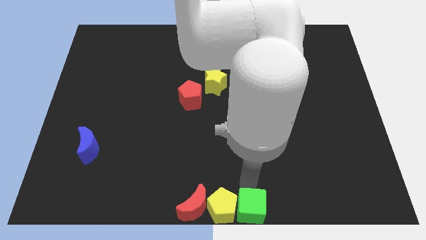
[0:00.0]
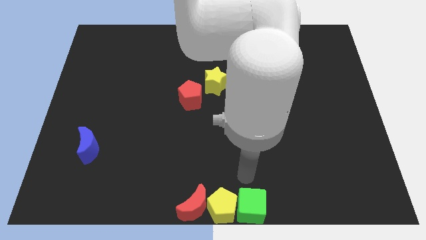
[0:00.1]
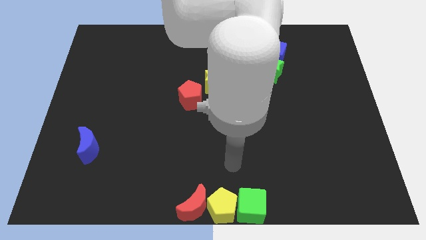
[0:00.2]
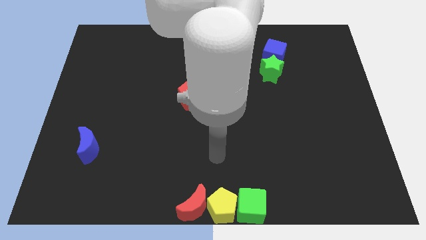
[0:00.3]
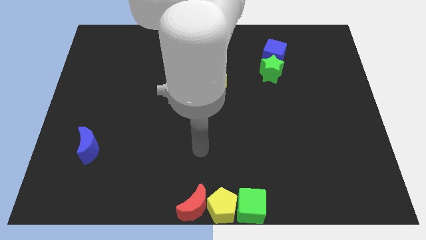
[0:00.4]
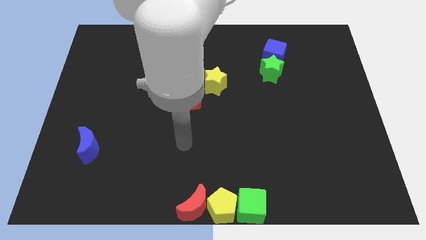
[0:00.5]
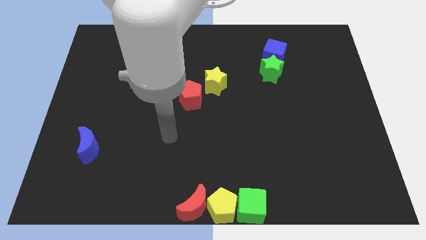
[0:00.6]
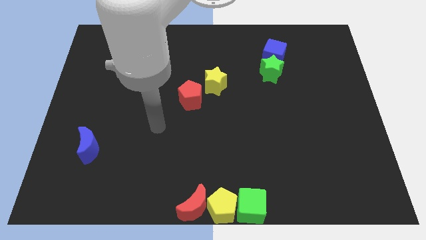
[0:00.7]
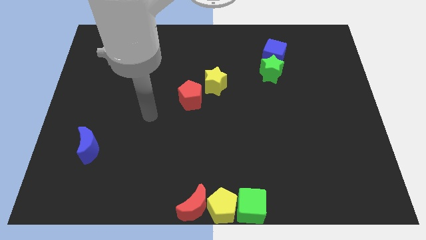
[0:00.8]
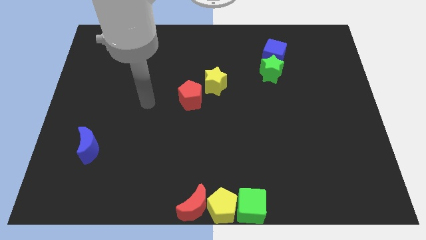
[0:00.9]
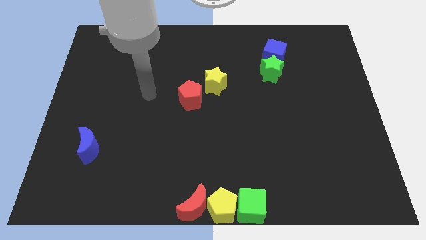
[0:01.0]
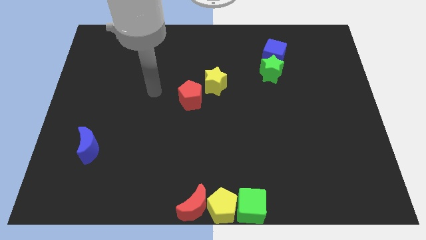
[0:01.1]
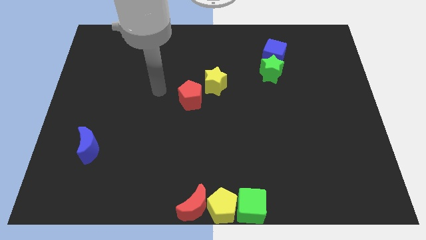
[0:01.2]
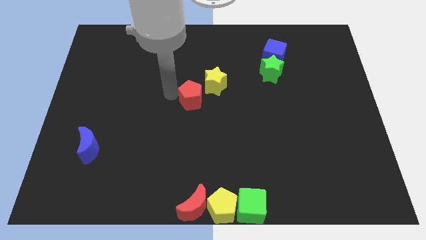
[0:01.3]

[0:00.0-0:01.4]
move your arm away from the green cube

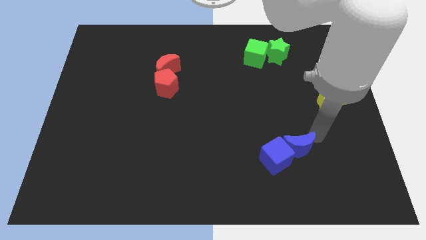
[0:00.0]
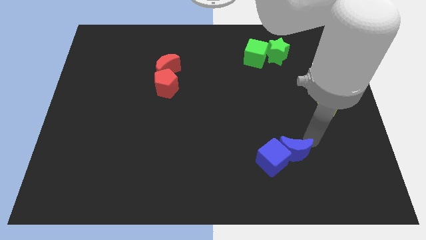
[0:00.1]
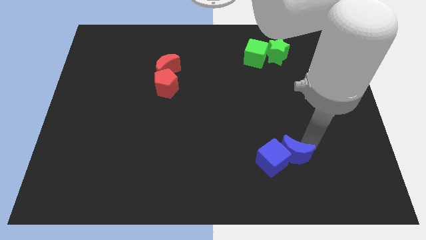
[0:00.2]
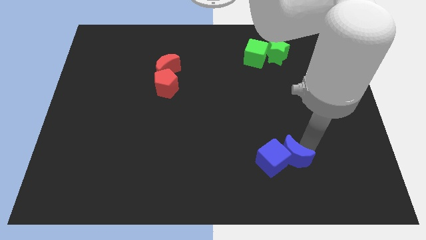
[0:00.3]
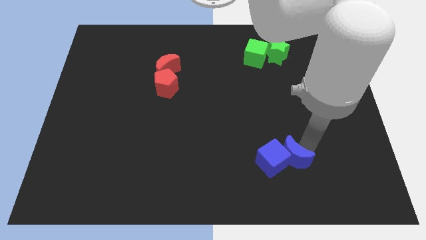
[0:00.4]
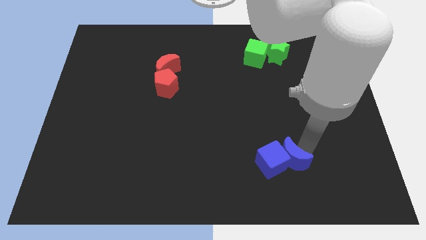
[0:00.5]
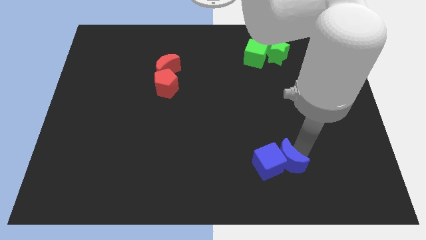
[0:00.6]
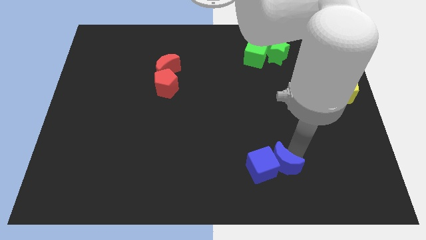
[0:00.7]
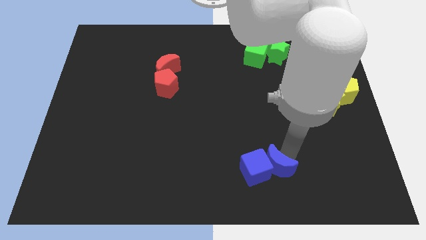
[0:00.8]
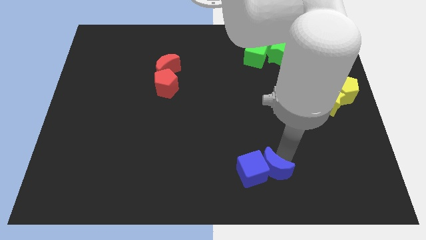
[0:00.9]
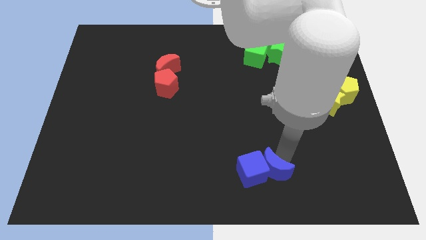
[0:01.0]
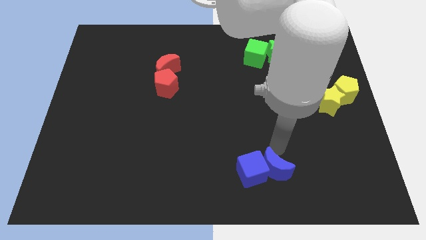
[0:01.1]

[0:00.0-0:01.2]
move the blue crescent with blue cube slightly

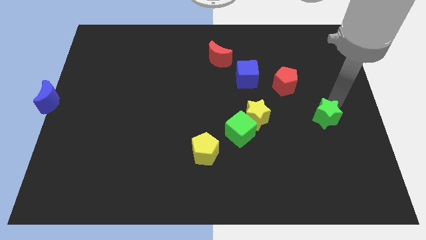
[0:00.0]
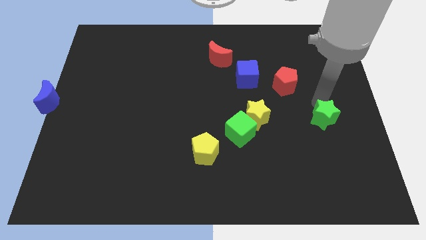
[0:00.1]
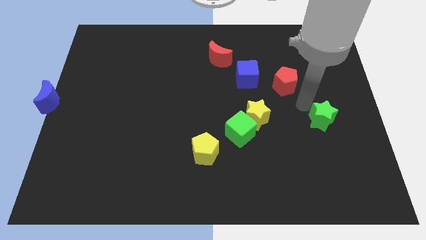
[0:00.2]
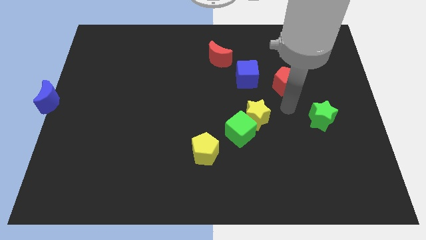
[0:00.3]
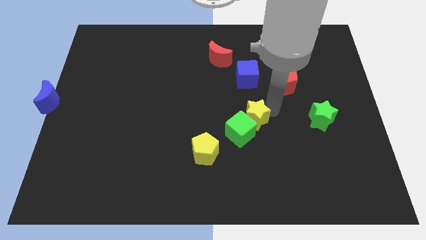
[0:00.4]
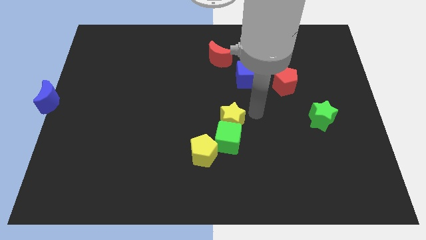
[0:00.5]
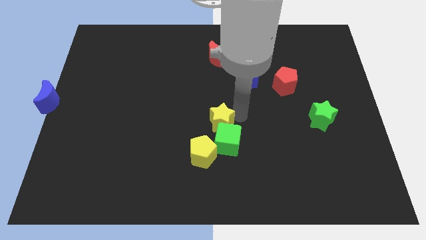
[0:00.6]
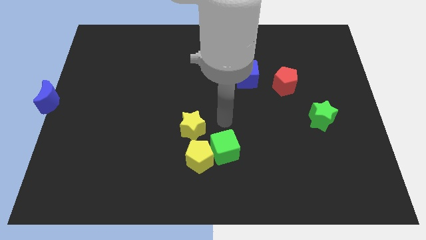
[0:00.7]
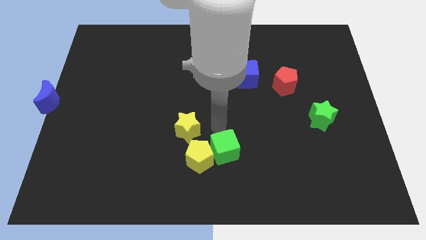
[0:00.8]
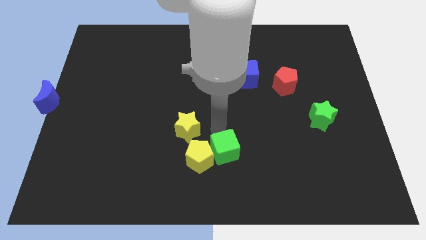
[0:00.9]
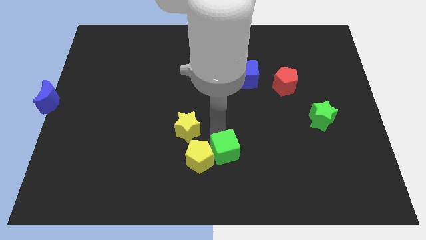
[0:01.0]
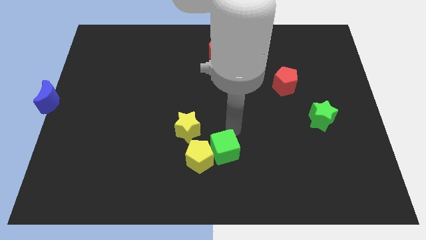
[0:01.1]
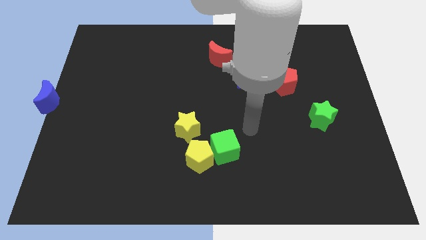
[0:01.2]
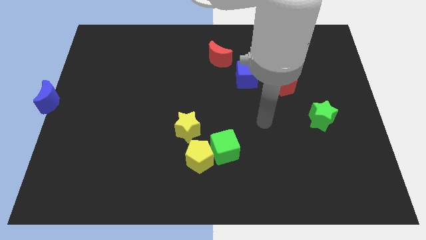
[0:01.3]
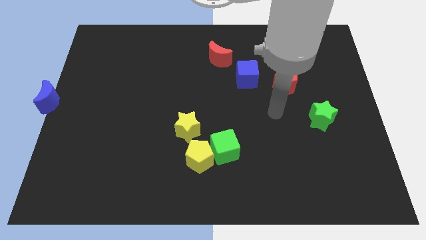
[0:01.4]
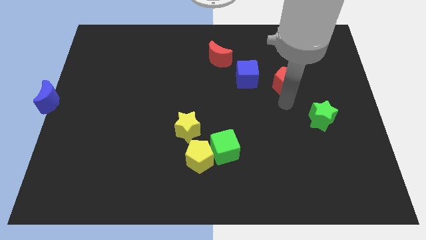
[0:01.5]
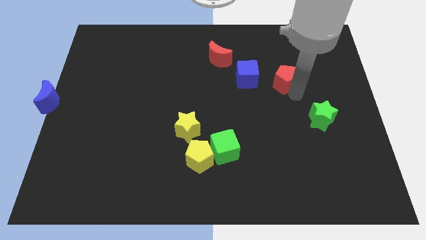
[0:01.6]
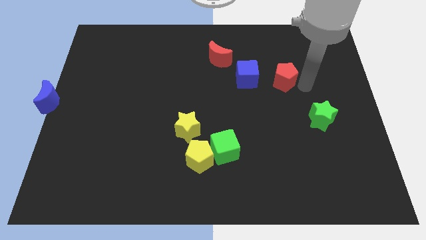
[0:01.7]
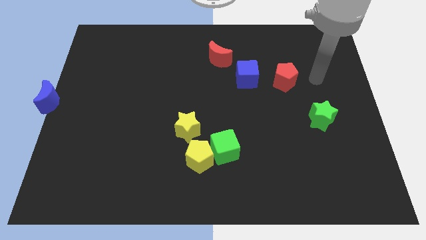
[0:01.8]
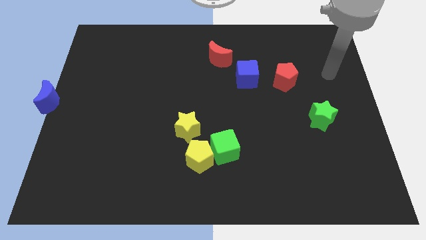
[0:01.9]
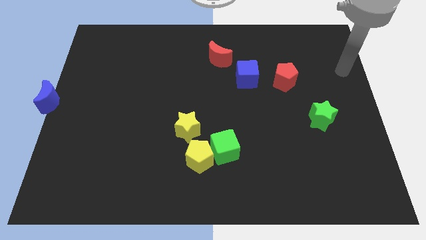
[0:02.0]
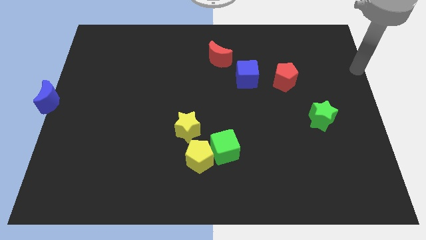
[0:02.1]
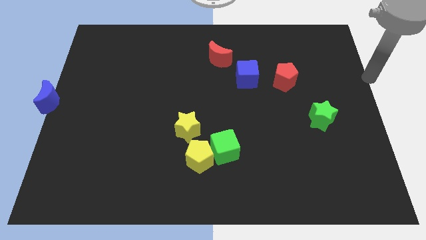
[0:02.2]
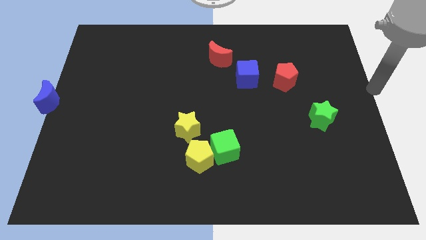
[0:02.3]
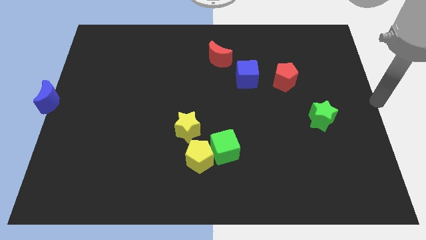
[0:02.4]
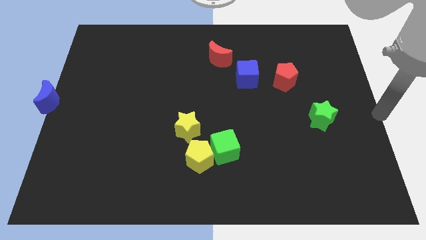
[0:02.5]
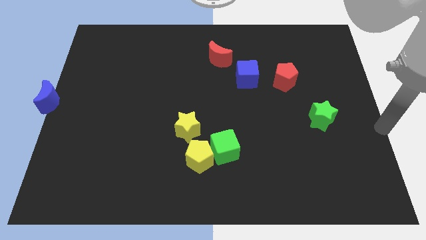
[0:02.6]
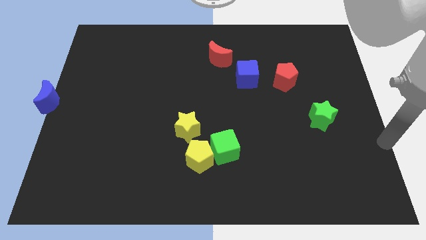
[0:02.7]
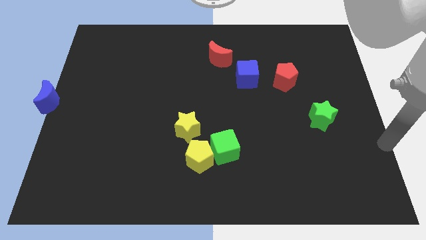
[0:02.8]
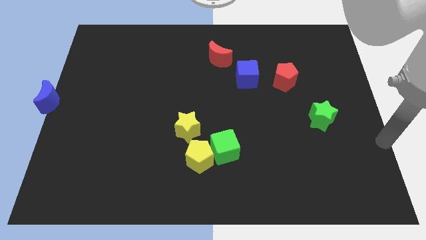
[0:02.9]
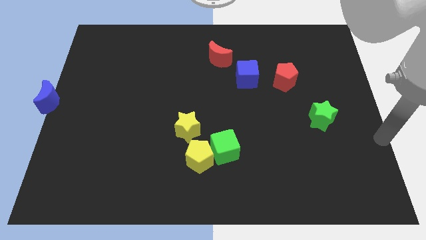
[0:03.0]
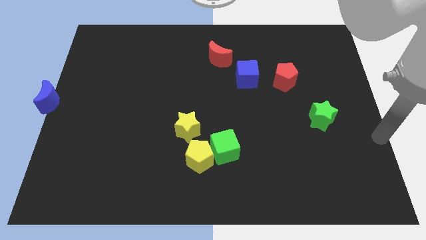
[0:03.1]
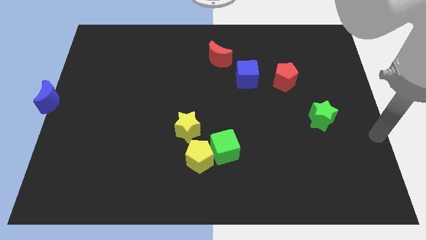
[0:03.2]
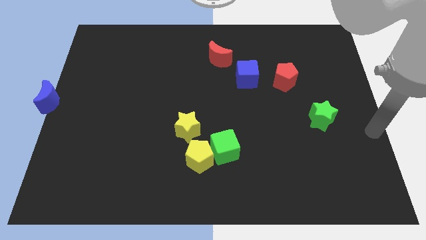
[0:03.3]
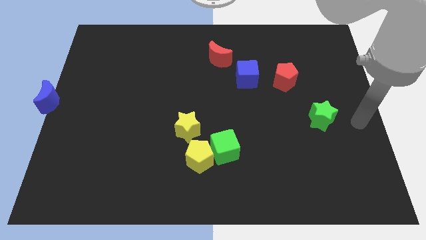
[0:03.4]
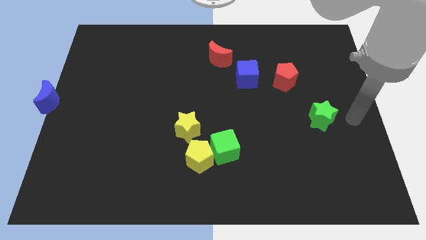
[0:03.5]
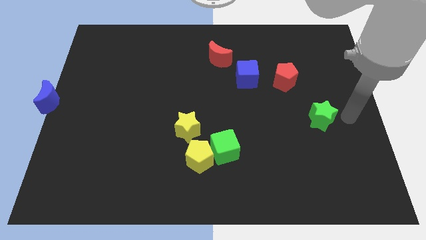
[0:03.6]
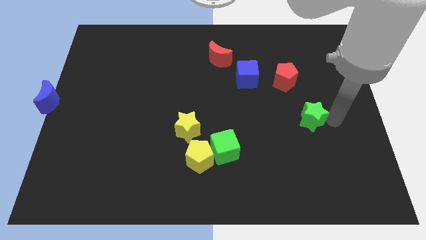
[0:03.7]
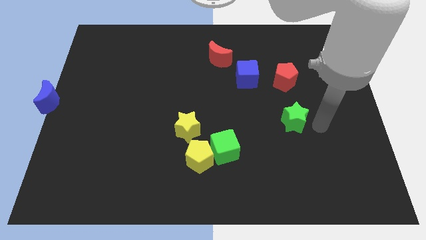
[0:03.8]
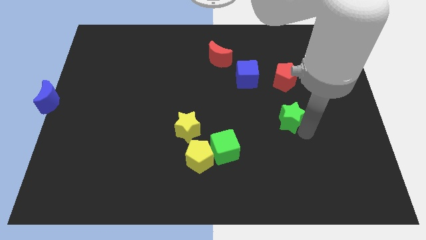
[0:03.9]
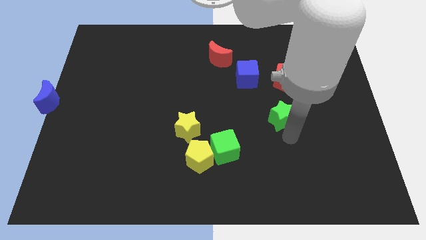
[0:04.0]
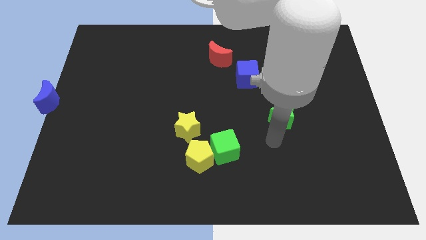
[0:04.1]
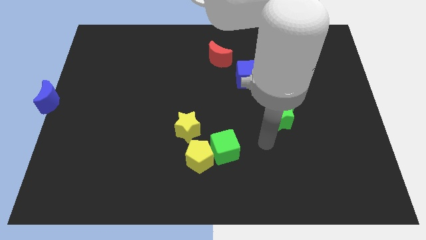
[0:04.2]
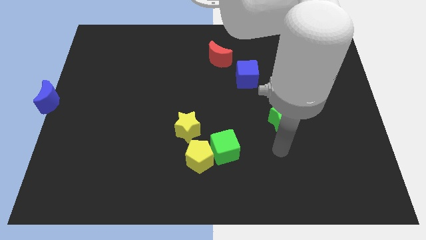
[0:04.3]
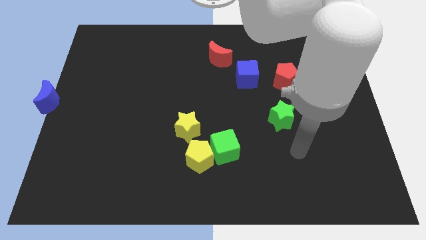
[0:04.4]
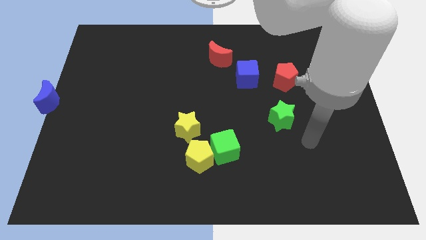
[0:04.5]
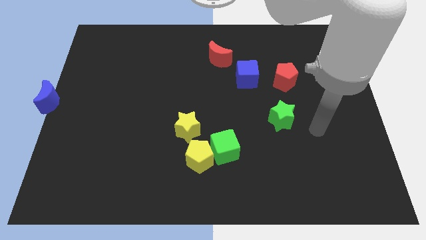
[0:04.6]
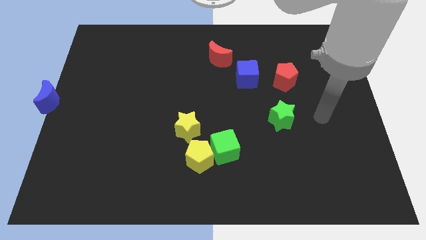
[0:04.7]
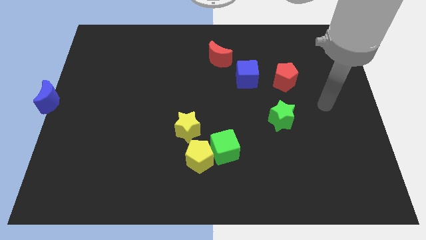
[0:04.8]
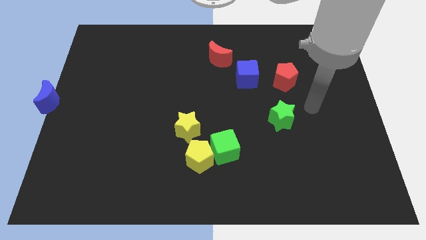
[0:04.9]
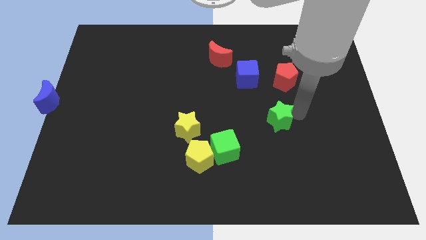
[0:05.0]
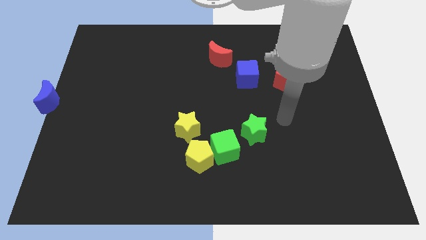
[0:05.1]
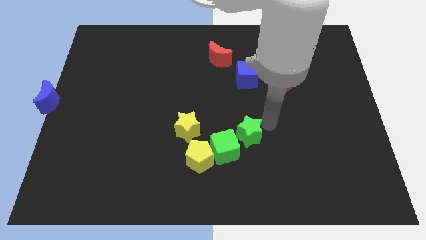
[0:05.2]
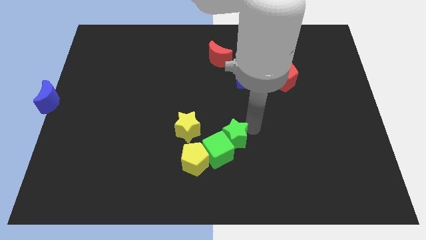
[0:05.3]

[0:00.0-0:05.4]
move the green star into the green cube

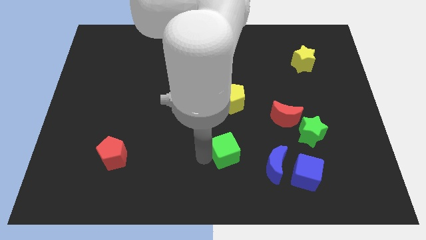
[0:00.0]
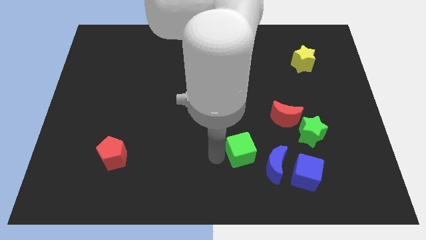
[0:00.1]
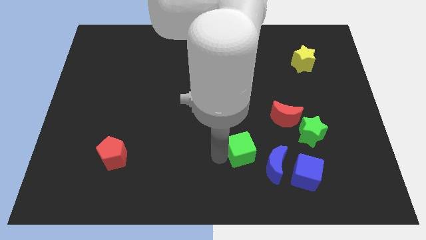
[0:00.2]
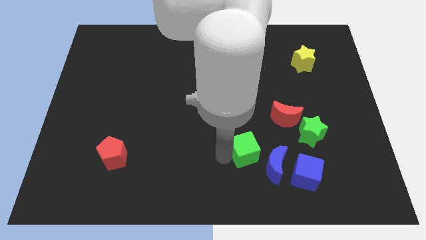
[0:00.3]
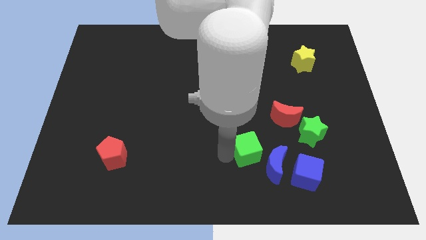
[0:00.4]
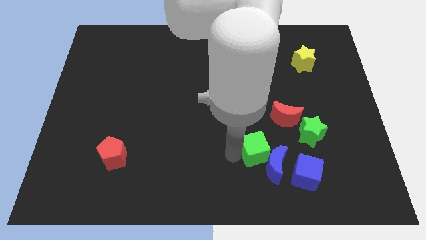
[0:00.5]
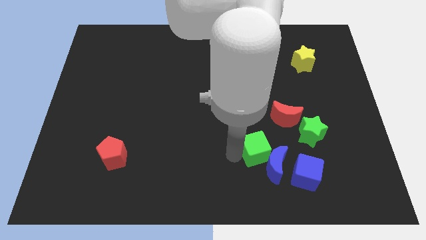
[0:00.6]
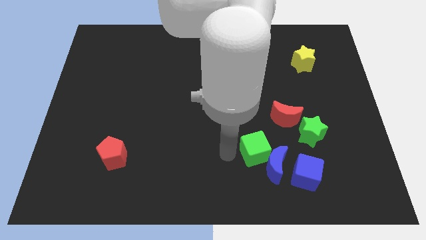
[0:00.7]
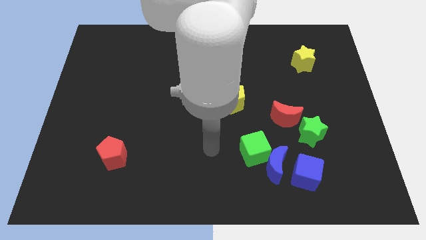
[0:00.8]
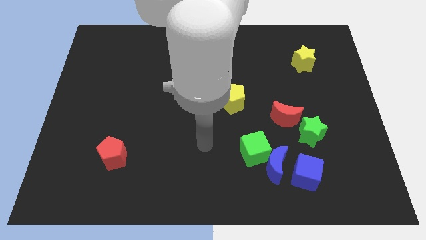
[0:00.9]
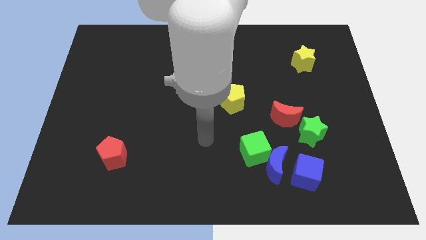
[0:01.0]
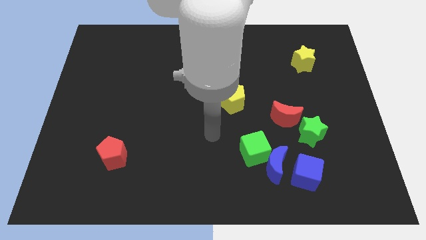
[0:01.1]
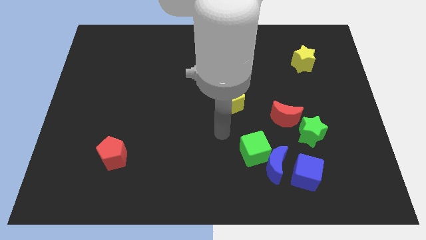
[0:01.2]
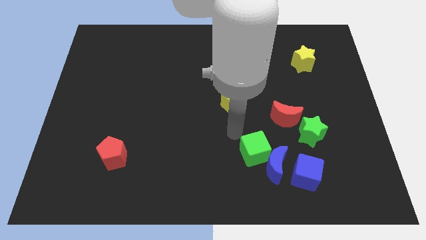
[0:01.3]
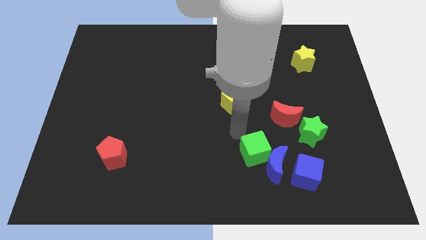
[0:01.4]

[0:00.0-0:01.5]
put the green cube diagonally bottom right to the yellow pentagon
